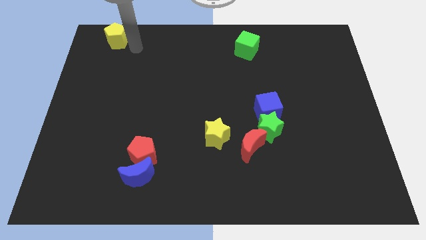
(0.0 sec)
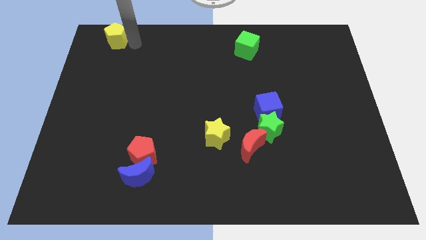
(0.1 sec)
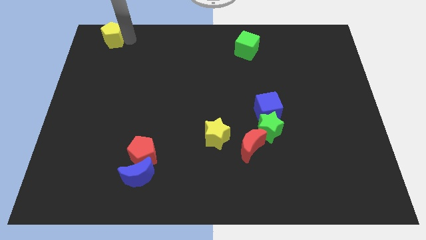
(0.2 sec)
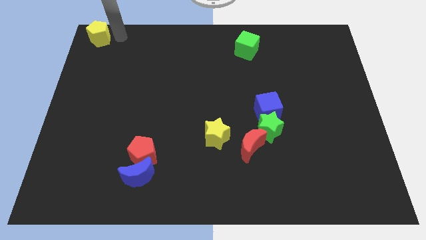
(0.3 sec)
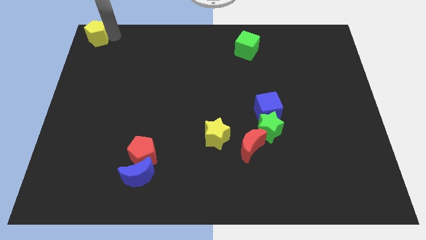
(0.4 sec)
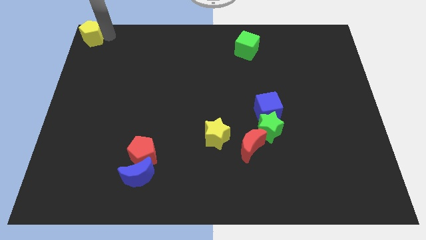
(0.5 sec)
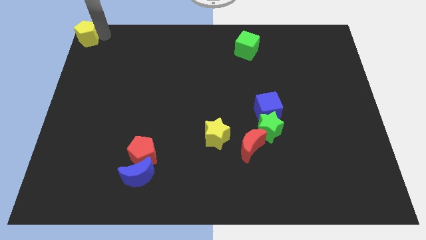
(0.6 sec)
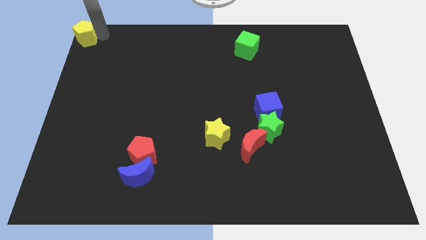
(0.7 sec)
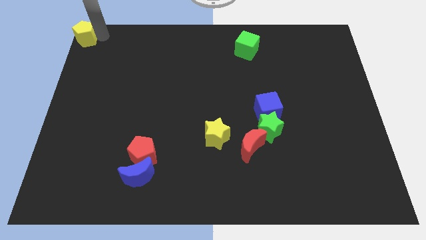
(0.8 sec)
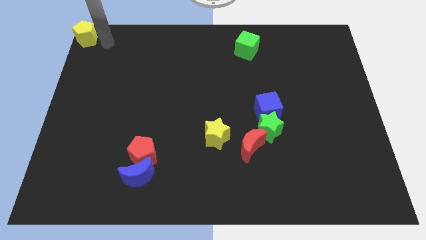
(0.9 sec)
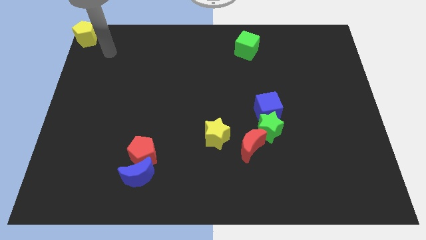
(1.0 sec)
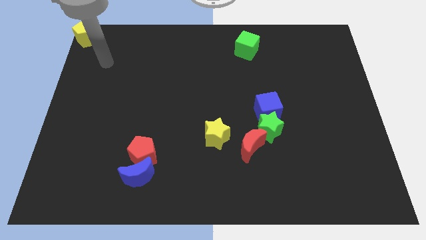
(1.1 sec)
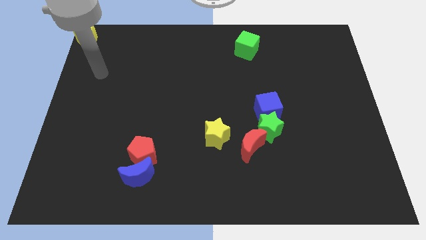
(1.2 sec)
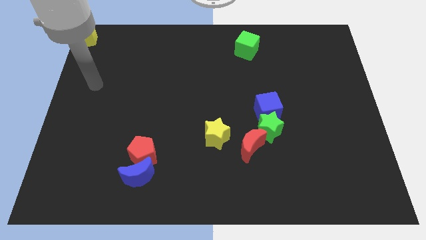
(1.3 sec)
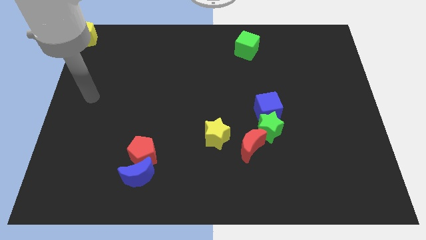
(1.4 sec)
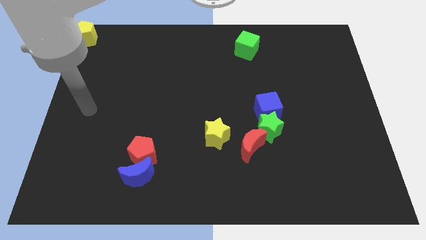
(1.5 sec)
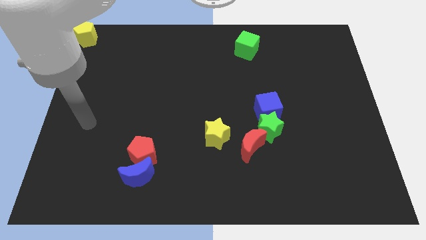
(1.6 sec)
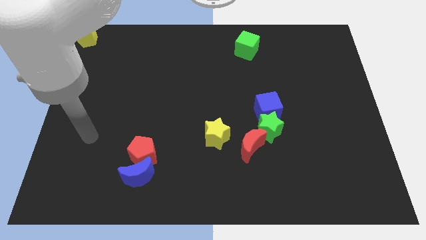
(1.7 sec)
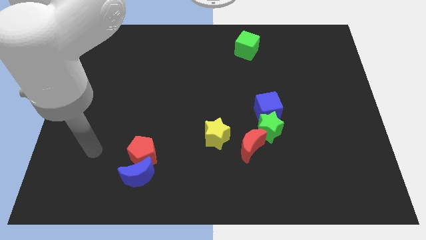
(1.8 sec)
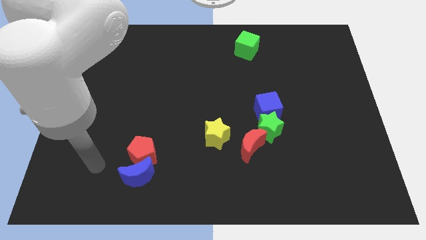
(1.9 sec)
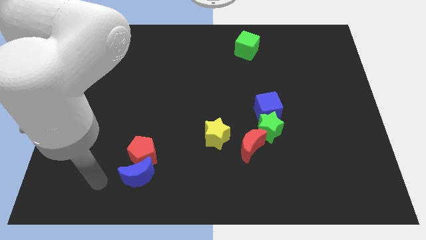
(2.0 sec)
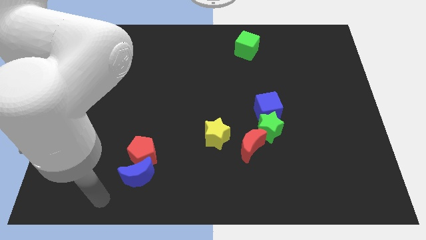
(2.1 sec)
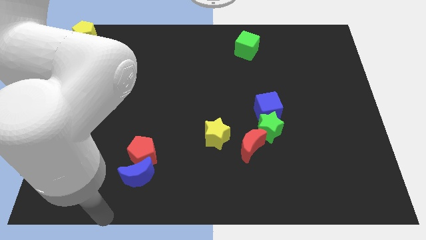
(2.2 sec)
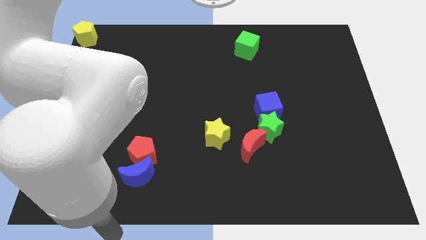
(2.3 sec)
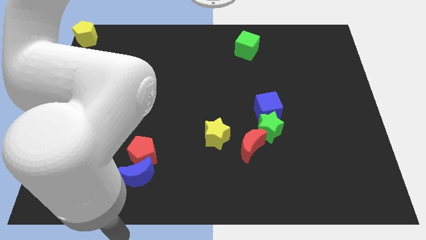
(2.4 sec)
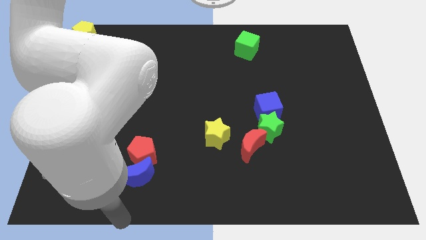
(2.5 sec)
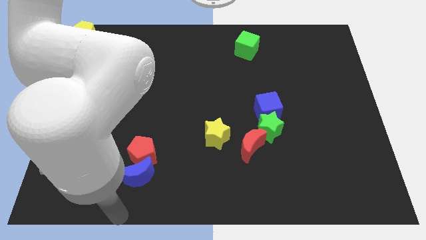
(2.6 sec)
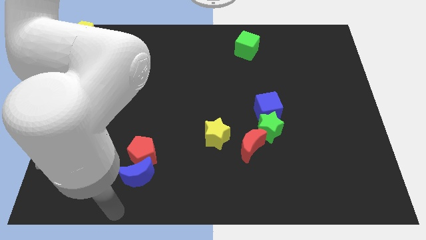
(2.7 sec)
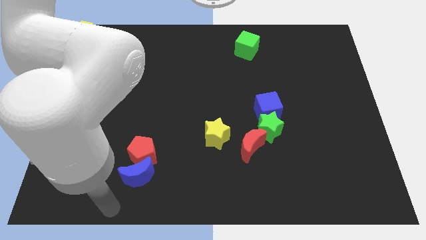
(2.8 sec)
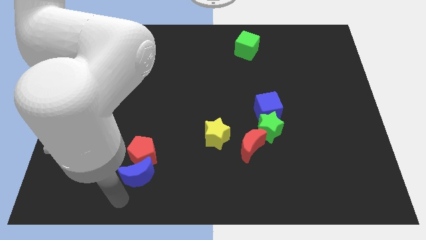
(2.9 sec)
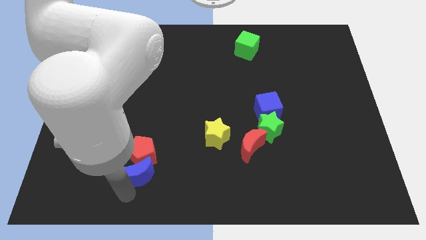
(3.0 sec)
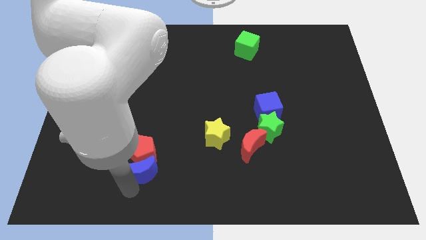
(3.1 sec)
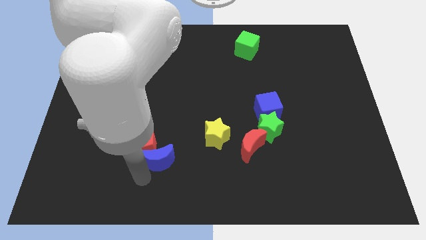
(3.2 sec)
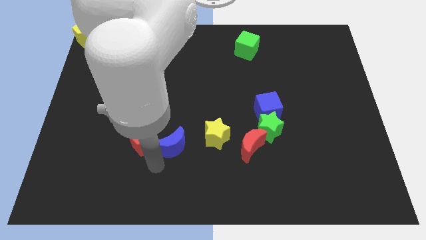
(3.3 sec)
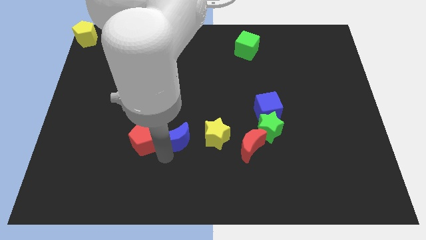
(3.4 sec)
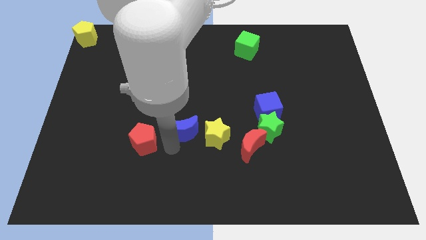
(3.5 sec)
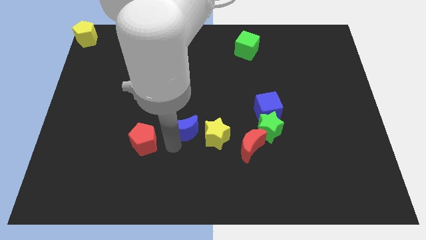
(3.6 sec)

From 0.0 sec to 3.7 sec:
move the blue moon to the left of the yellow star

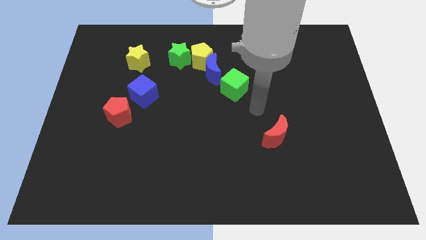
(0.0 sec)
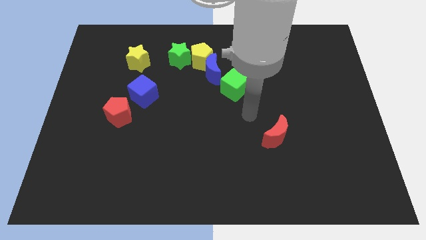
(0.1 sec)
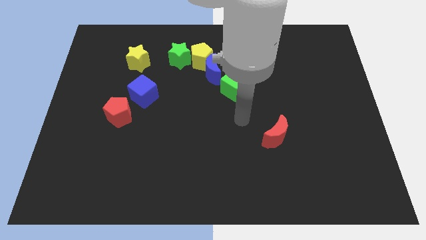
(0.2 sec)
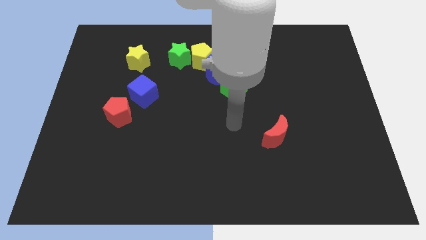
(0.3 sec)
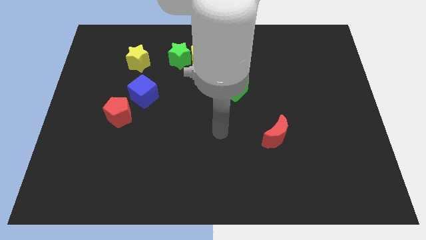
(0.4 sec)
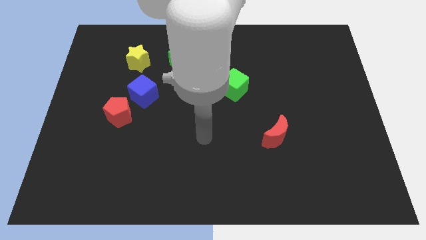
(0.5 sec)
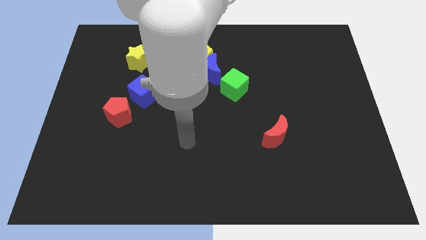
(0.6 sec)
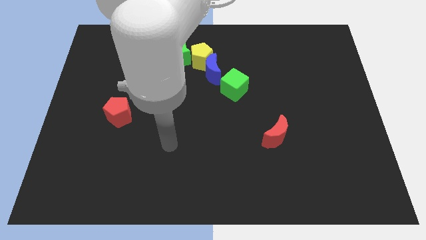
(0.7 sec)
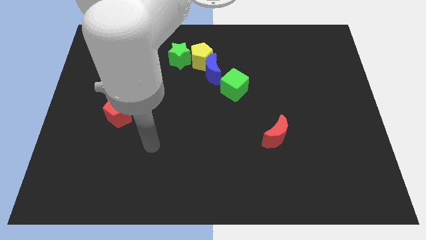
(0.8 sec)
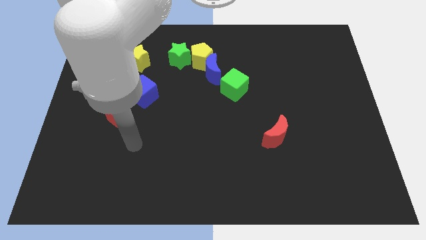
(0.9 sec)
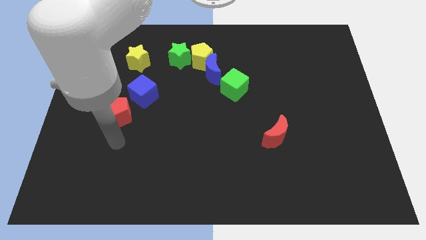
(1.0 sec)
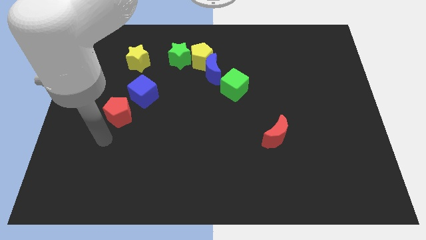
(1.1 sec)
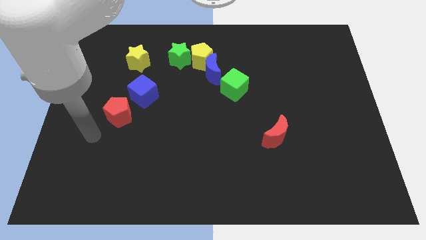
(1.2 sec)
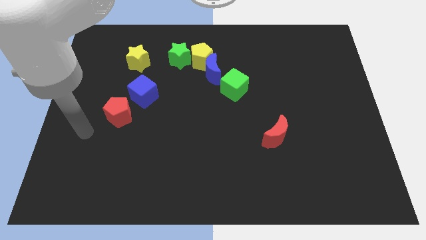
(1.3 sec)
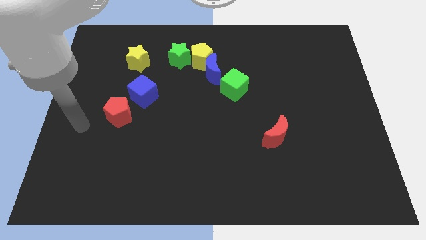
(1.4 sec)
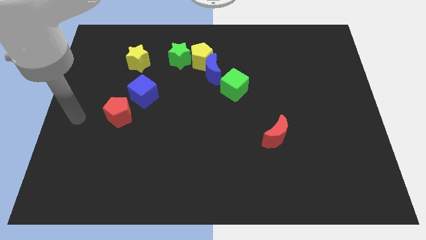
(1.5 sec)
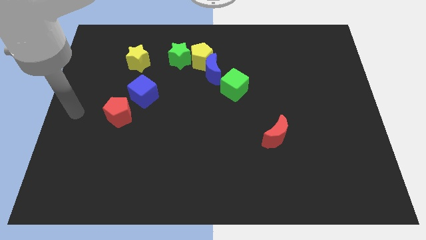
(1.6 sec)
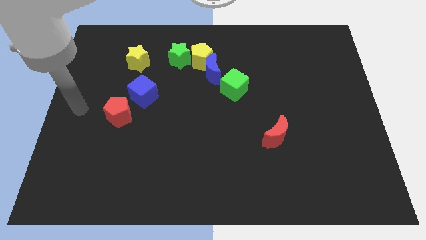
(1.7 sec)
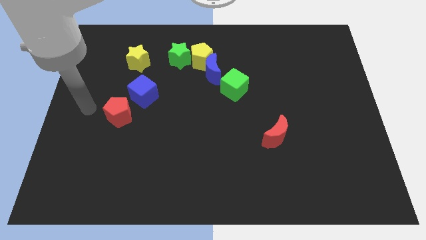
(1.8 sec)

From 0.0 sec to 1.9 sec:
move your hand towards center left

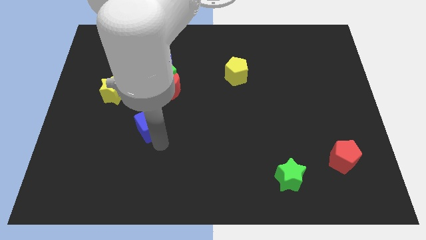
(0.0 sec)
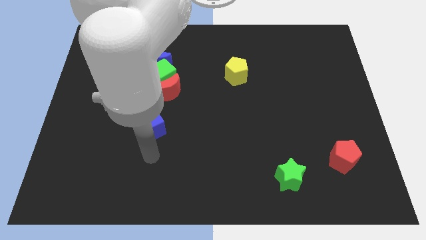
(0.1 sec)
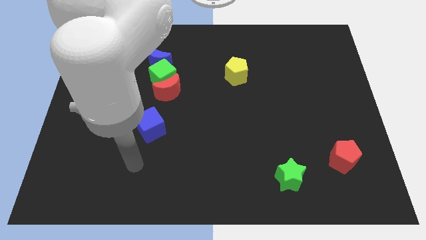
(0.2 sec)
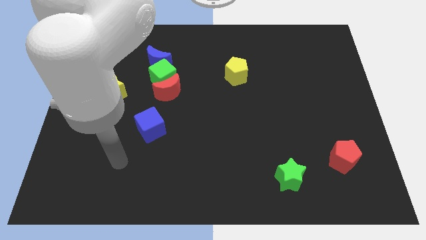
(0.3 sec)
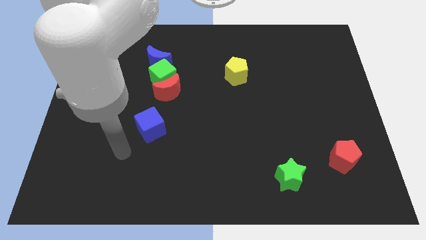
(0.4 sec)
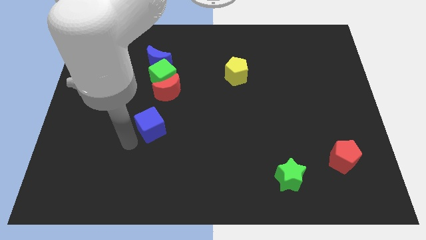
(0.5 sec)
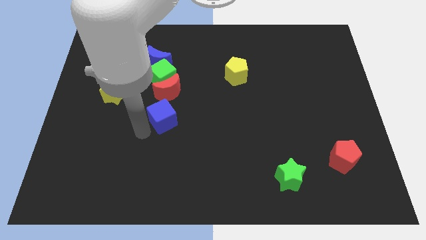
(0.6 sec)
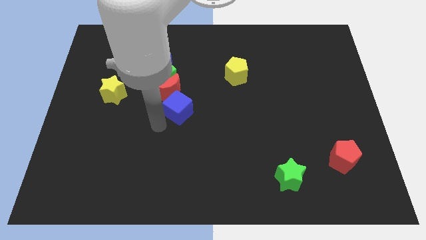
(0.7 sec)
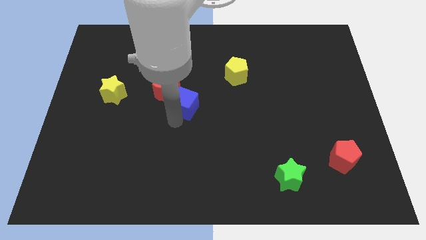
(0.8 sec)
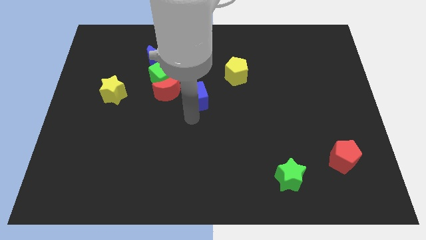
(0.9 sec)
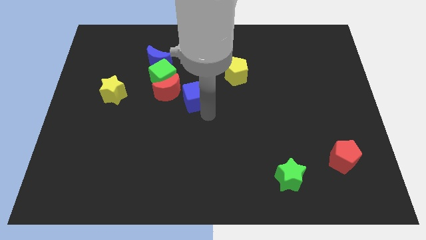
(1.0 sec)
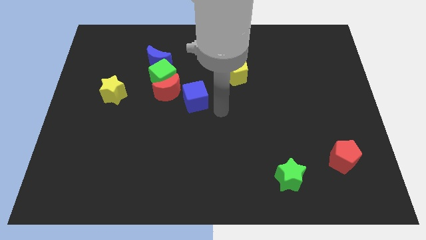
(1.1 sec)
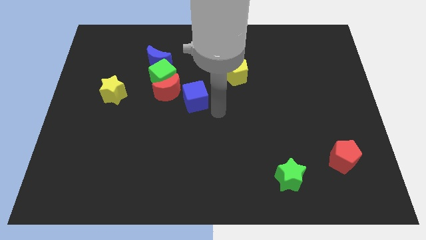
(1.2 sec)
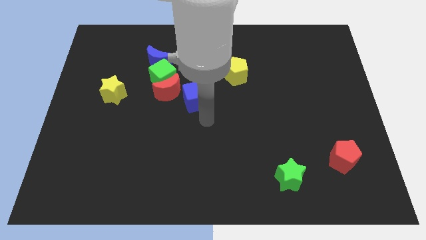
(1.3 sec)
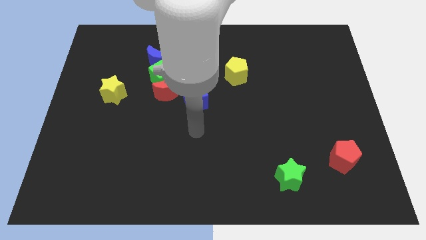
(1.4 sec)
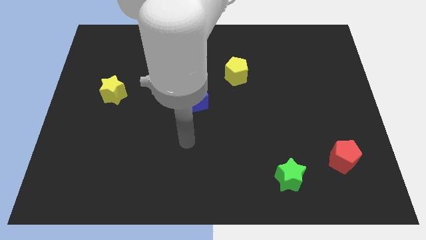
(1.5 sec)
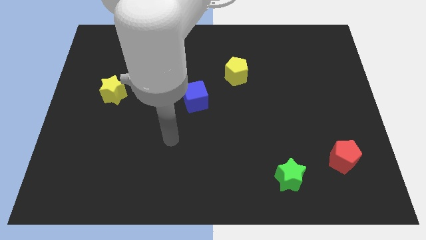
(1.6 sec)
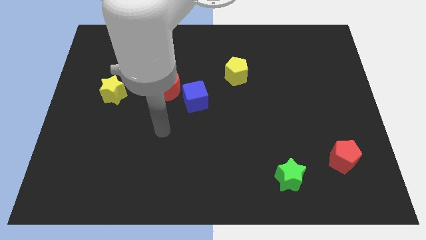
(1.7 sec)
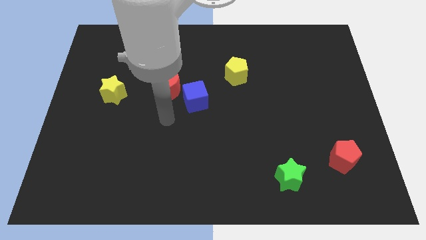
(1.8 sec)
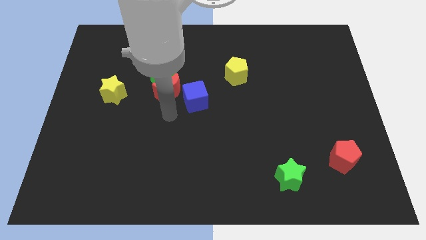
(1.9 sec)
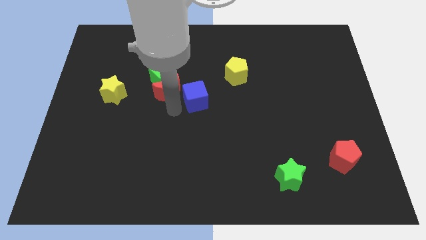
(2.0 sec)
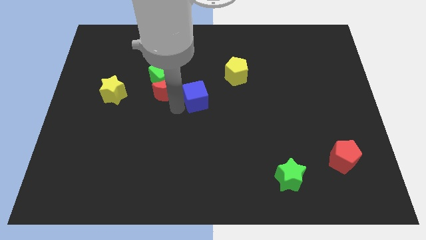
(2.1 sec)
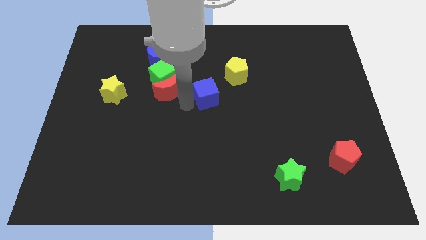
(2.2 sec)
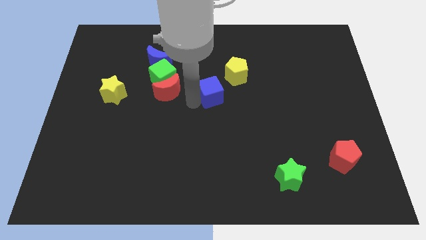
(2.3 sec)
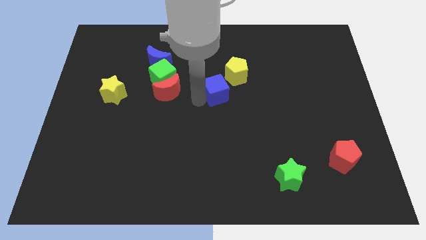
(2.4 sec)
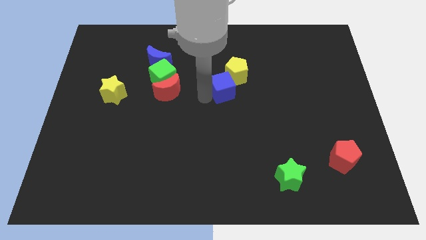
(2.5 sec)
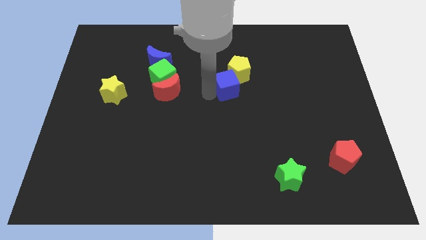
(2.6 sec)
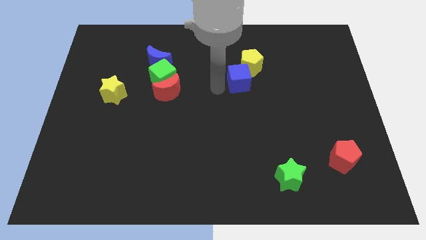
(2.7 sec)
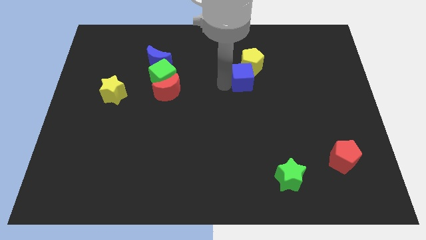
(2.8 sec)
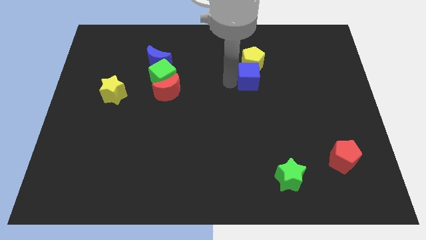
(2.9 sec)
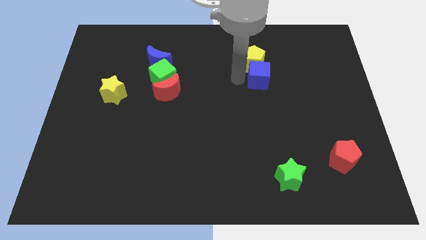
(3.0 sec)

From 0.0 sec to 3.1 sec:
place the blue cube on the bottom of yellow pentagon

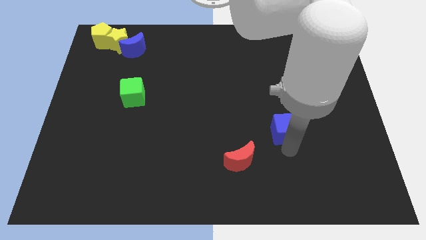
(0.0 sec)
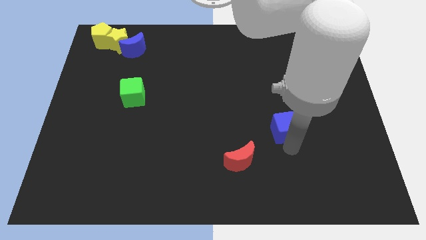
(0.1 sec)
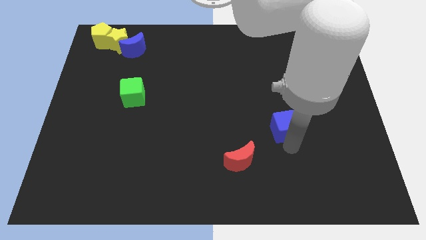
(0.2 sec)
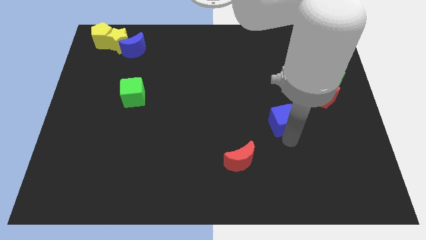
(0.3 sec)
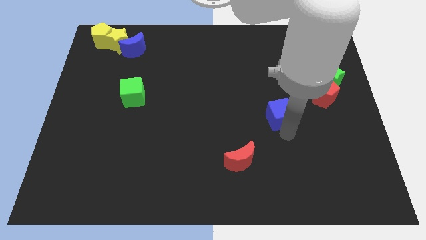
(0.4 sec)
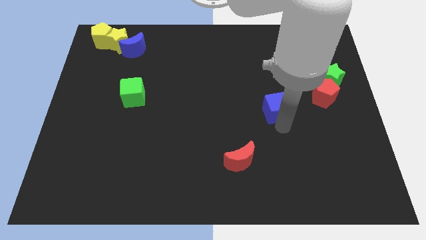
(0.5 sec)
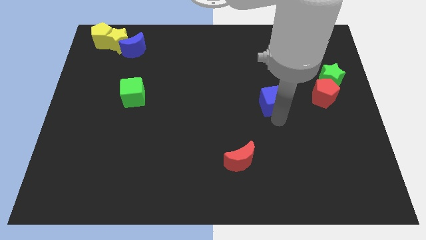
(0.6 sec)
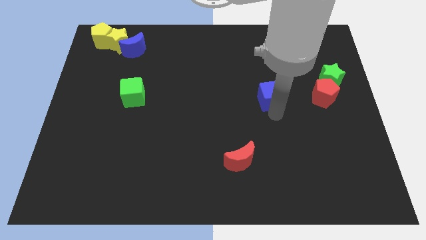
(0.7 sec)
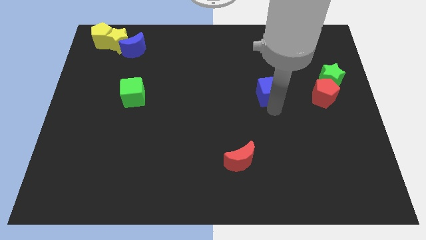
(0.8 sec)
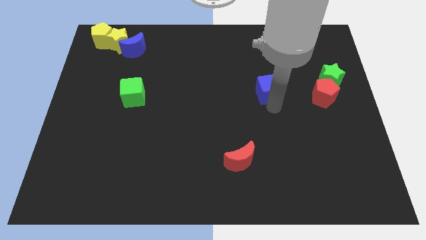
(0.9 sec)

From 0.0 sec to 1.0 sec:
place blue cube parallel left to red pentagon
